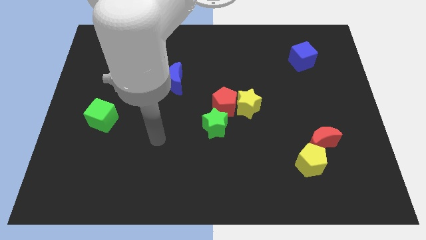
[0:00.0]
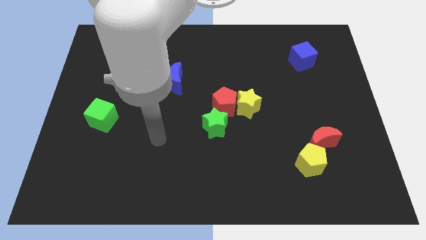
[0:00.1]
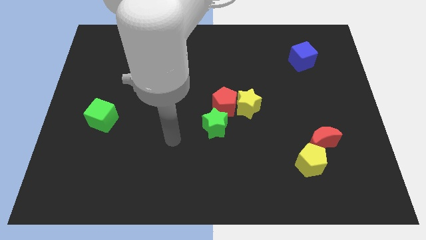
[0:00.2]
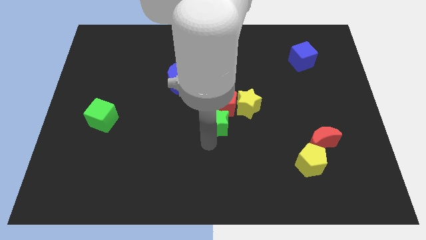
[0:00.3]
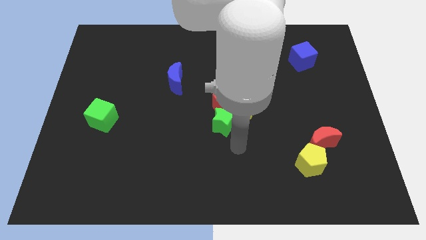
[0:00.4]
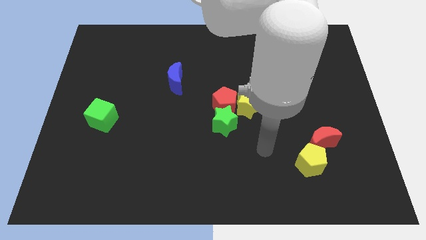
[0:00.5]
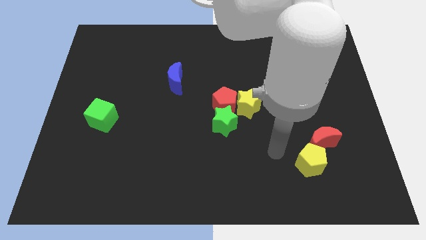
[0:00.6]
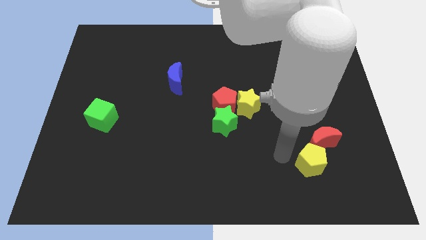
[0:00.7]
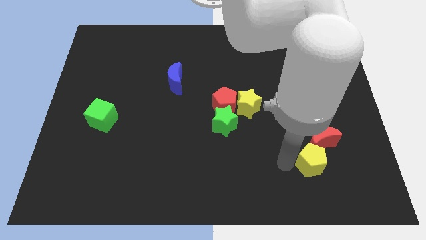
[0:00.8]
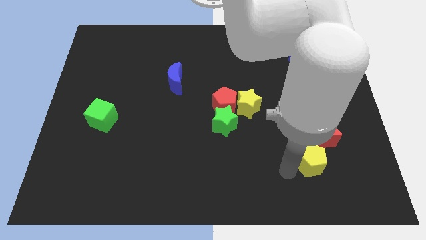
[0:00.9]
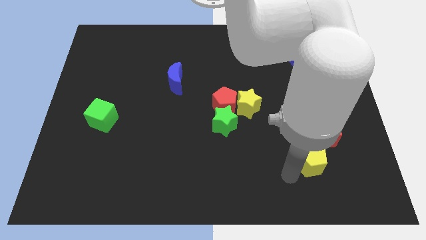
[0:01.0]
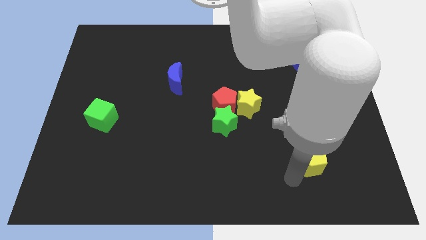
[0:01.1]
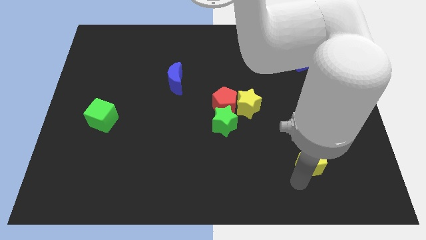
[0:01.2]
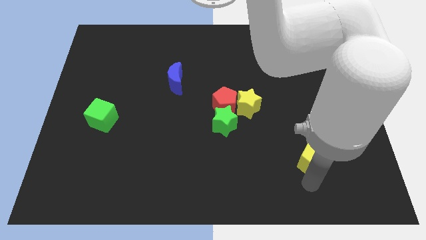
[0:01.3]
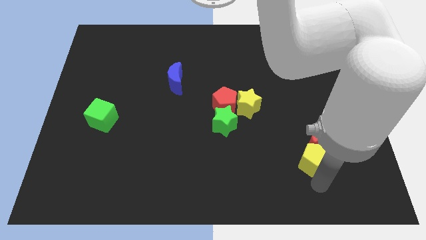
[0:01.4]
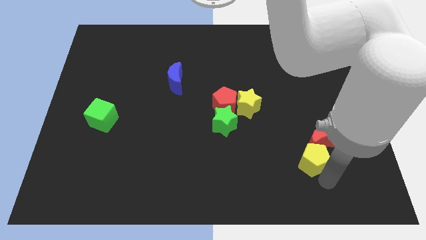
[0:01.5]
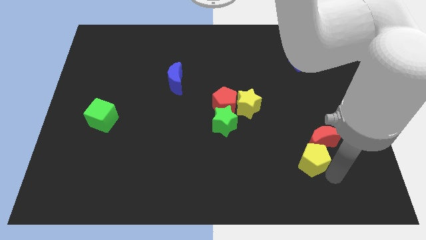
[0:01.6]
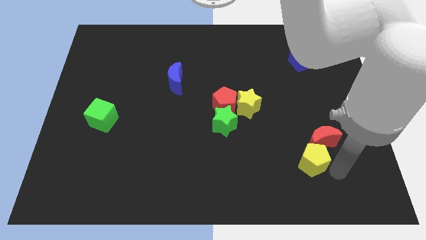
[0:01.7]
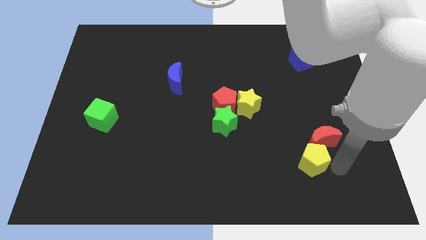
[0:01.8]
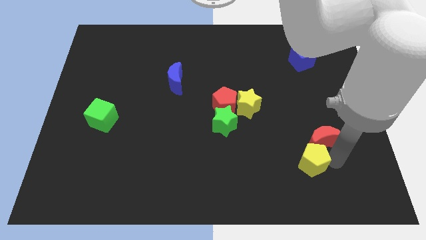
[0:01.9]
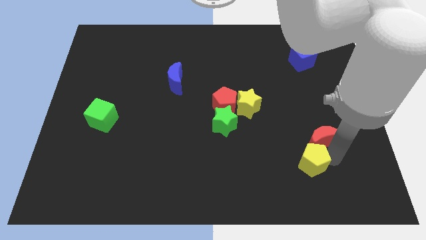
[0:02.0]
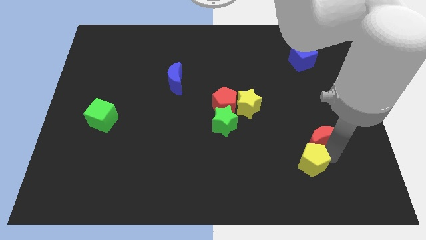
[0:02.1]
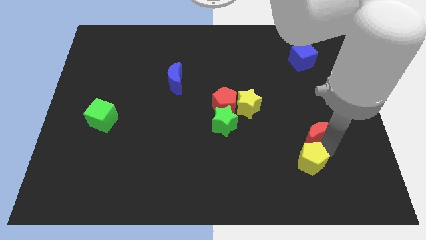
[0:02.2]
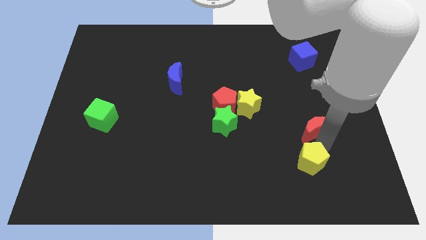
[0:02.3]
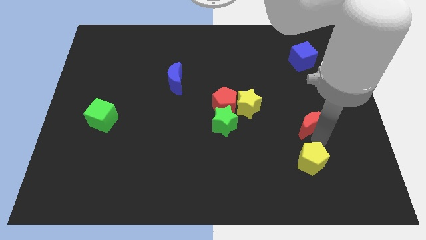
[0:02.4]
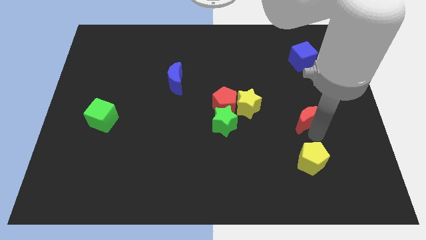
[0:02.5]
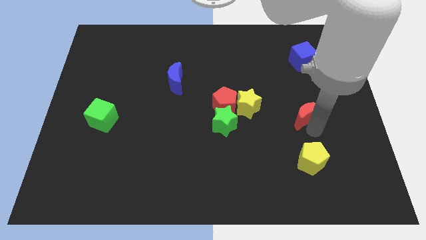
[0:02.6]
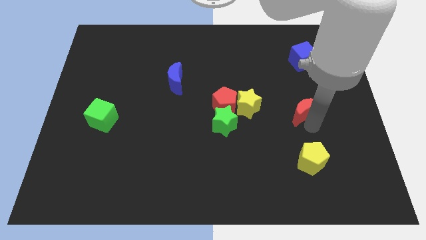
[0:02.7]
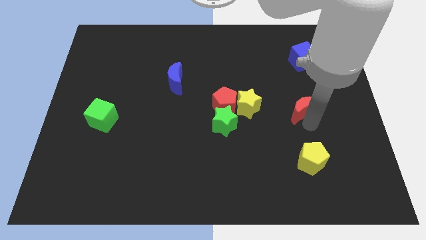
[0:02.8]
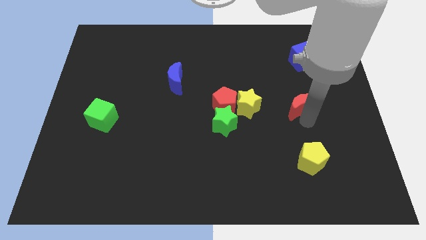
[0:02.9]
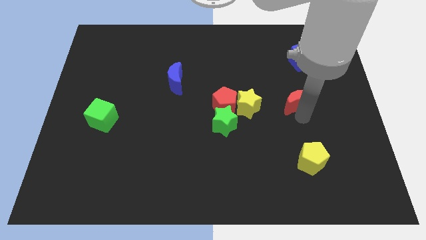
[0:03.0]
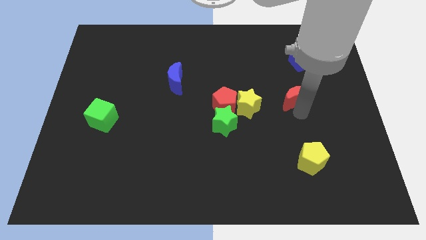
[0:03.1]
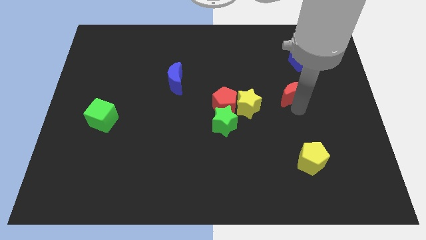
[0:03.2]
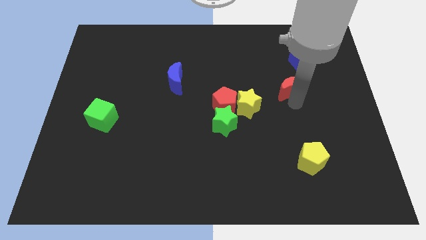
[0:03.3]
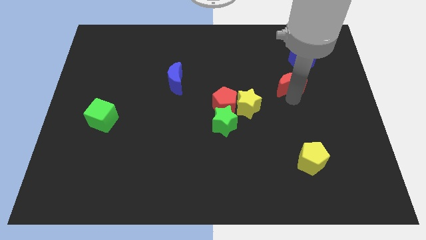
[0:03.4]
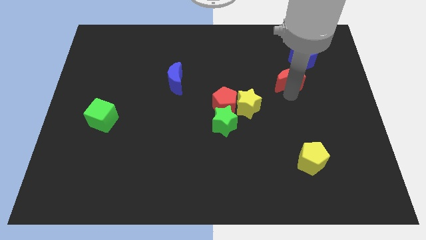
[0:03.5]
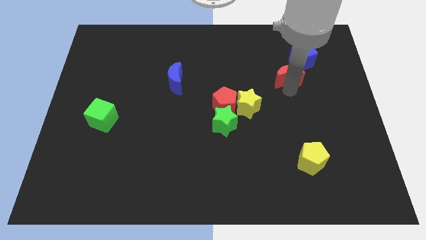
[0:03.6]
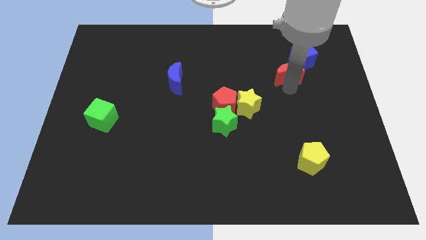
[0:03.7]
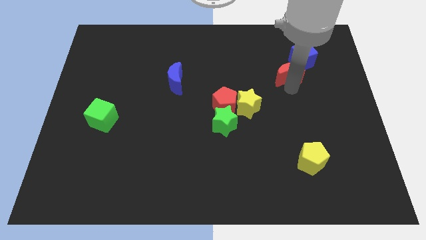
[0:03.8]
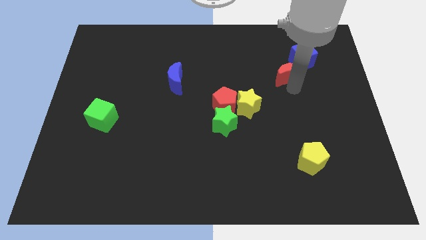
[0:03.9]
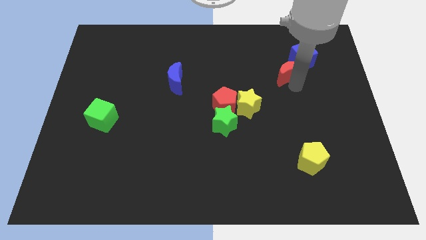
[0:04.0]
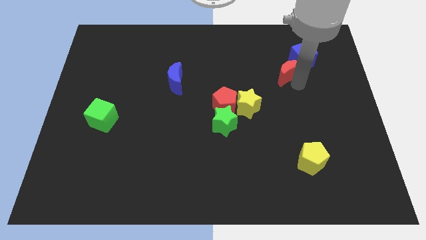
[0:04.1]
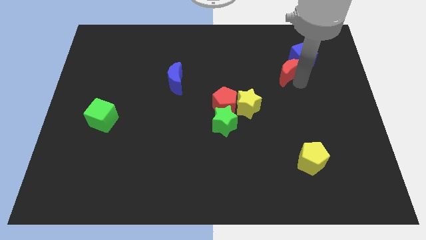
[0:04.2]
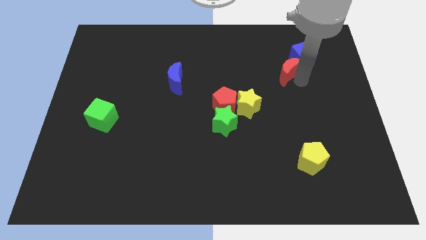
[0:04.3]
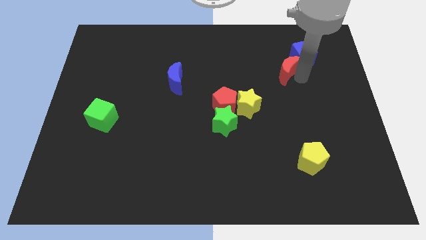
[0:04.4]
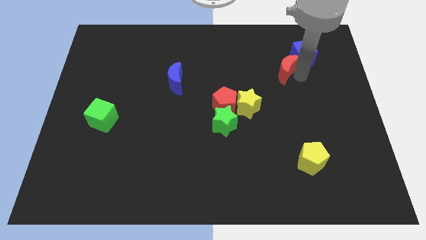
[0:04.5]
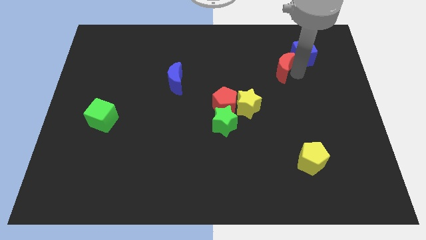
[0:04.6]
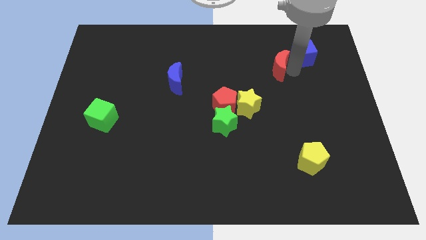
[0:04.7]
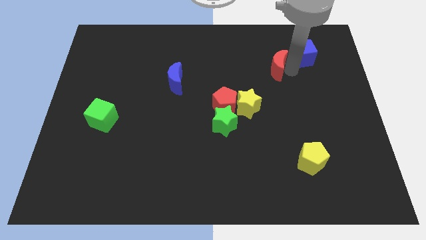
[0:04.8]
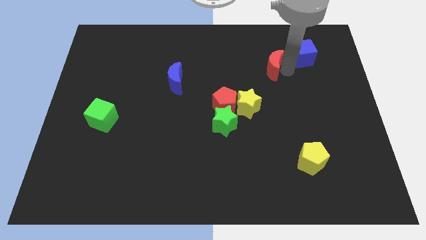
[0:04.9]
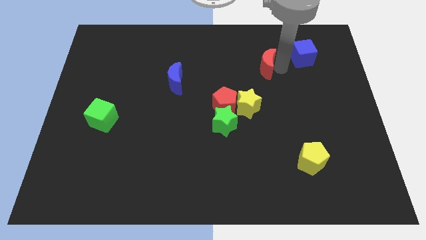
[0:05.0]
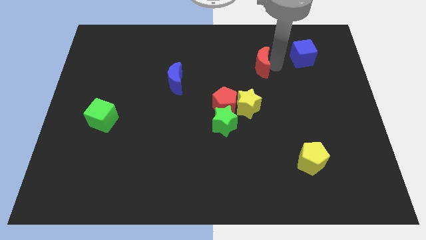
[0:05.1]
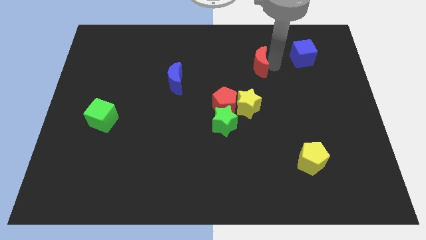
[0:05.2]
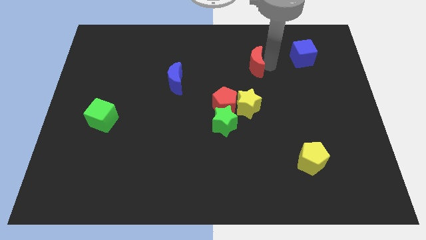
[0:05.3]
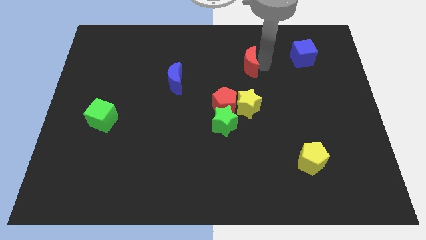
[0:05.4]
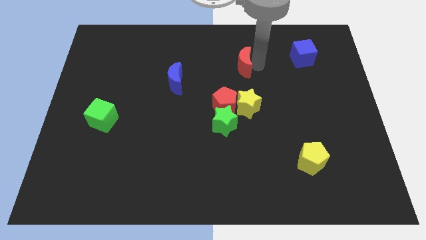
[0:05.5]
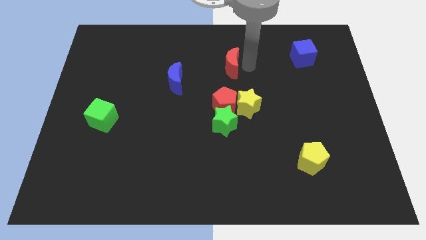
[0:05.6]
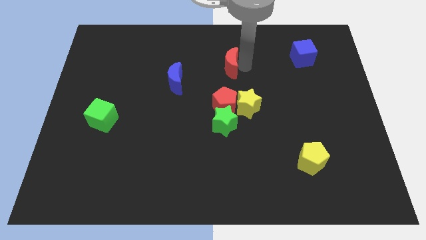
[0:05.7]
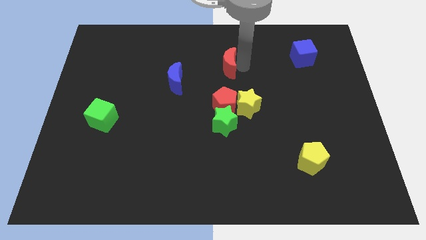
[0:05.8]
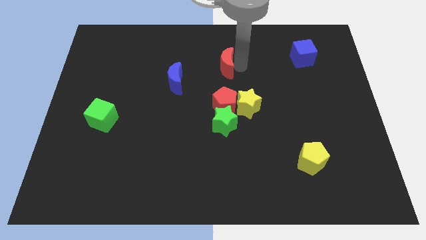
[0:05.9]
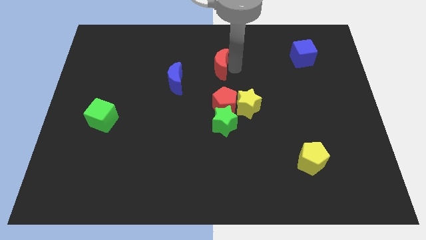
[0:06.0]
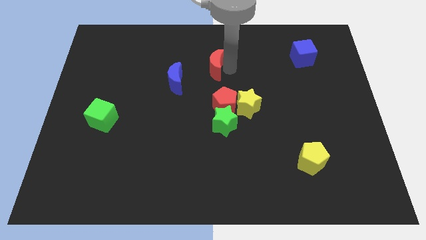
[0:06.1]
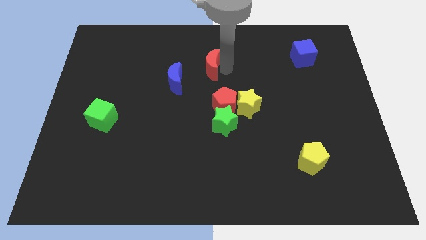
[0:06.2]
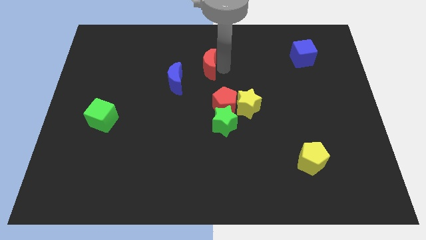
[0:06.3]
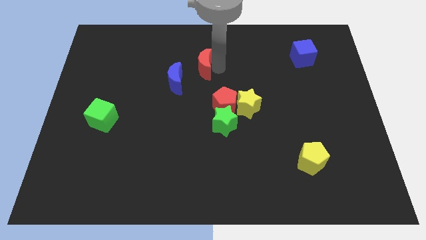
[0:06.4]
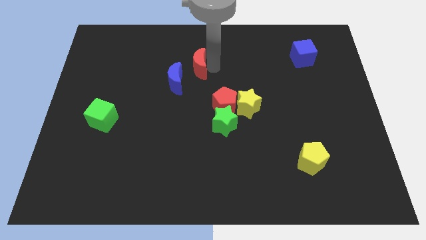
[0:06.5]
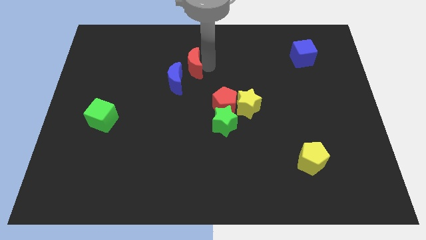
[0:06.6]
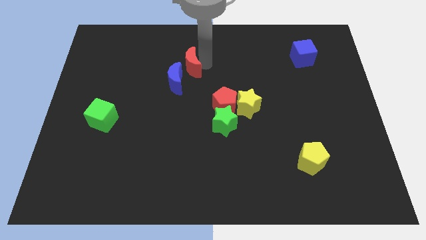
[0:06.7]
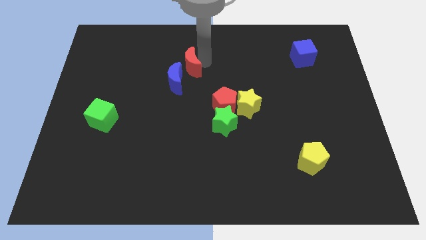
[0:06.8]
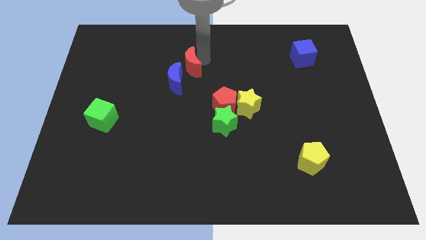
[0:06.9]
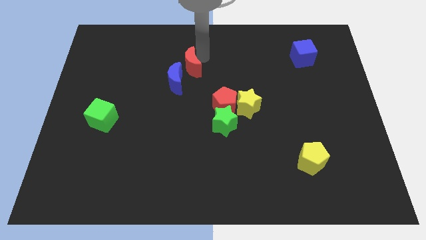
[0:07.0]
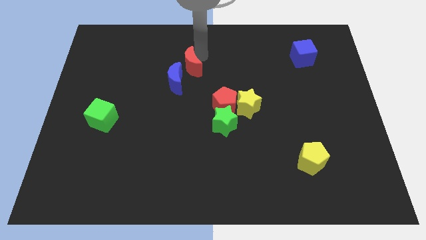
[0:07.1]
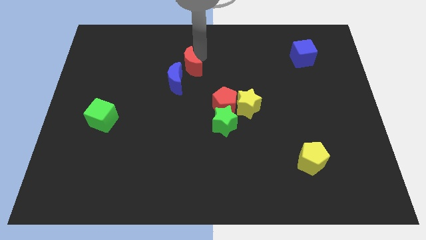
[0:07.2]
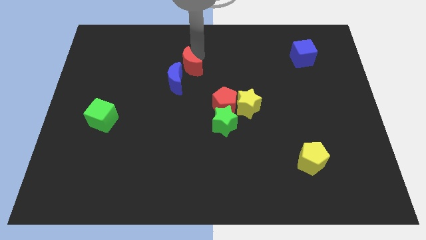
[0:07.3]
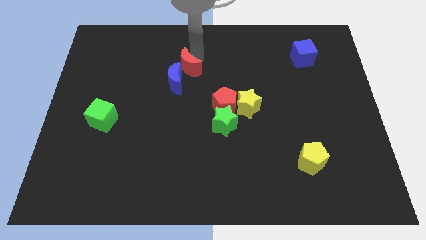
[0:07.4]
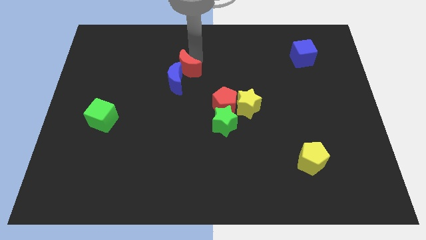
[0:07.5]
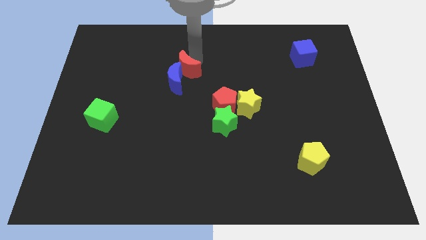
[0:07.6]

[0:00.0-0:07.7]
put the red moon to the blue moon

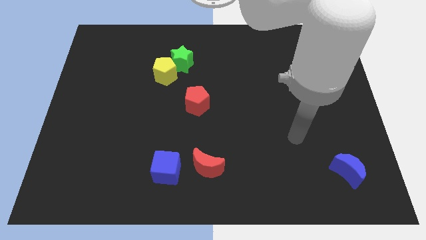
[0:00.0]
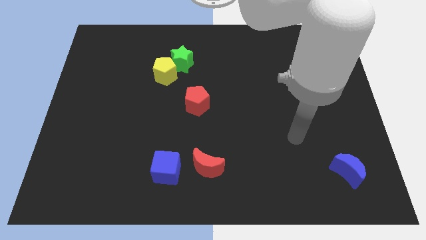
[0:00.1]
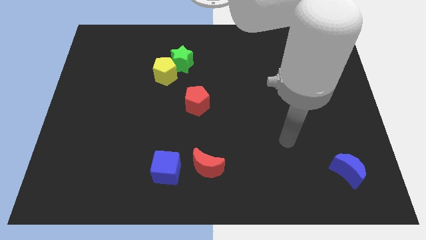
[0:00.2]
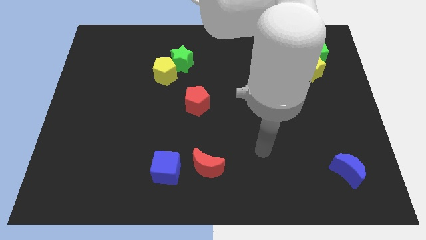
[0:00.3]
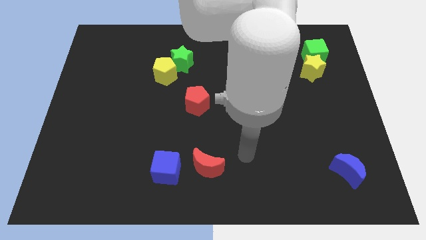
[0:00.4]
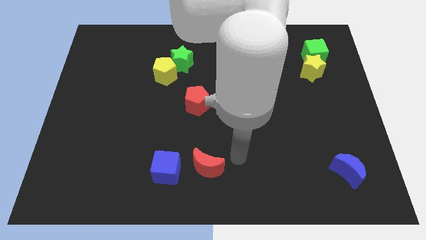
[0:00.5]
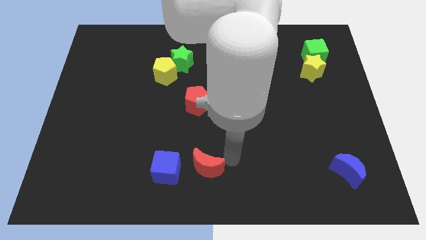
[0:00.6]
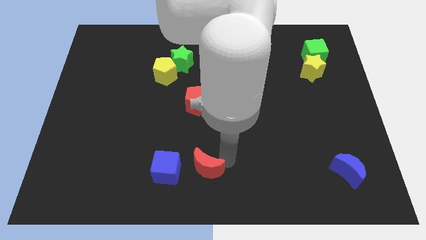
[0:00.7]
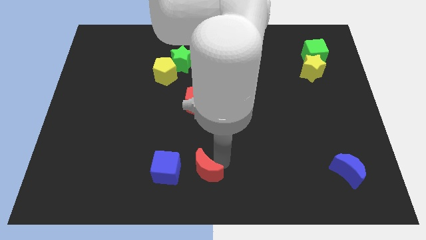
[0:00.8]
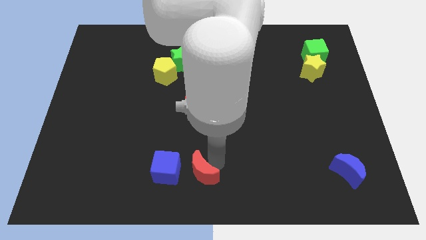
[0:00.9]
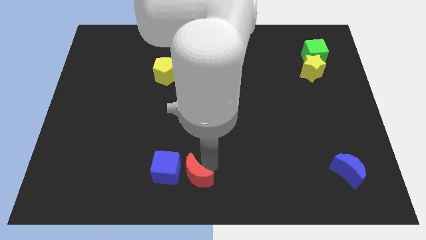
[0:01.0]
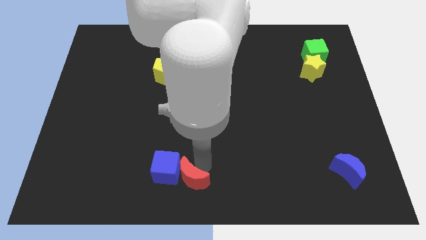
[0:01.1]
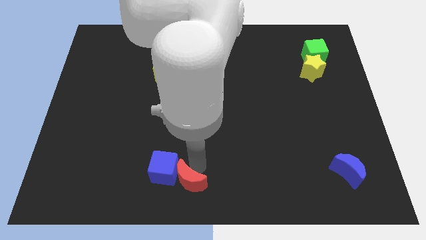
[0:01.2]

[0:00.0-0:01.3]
slide the red moon close to the blue cube
